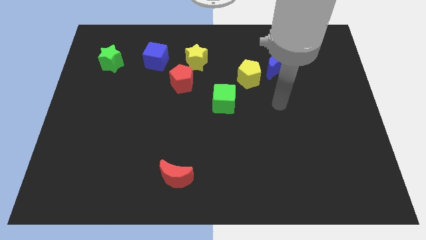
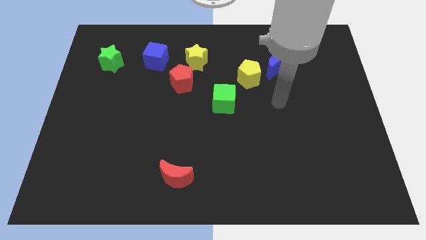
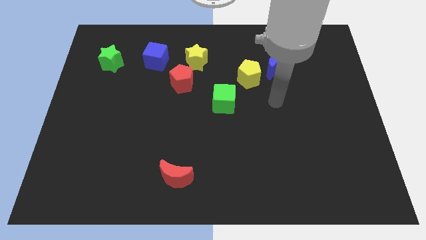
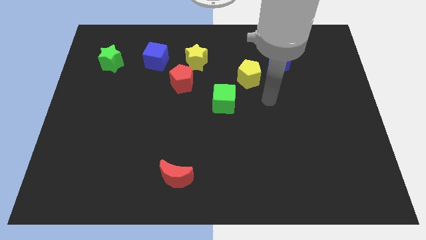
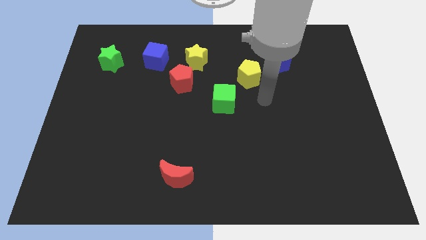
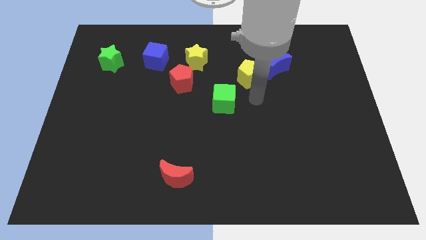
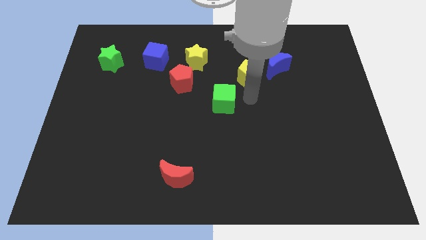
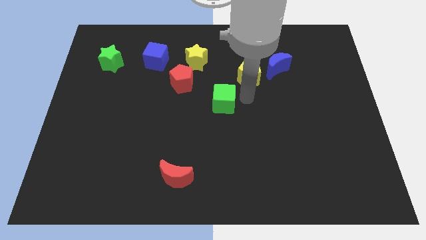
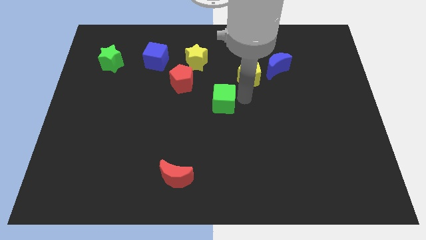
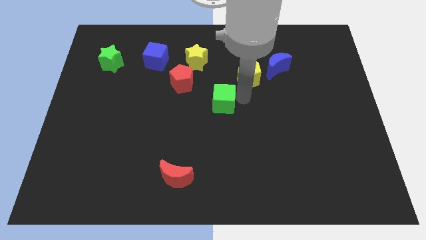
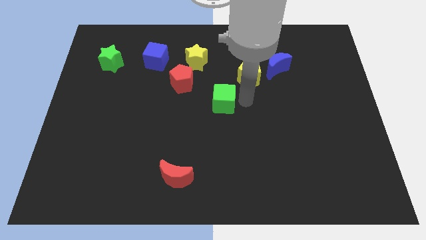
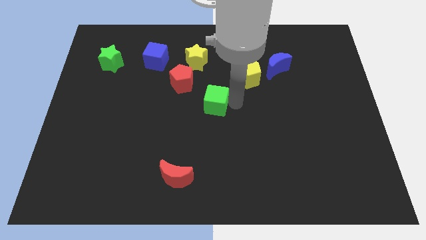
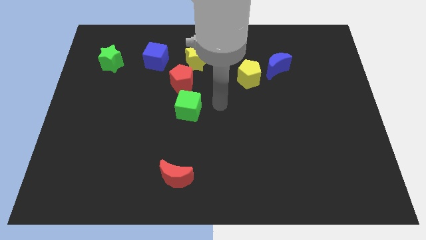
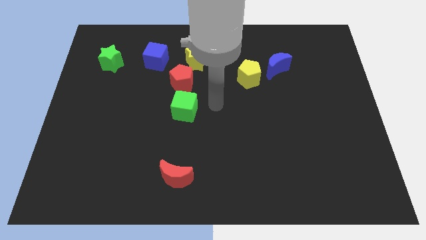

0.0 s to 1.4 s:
put the green cube in between the red pentagon and red crescent

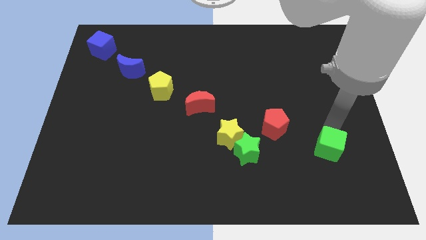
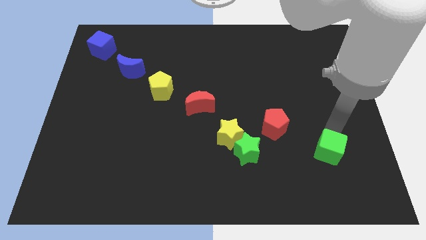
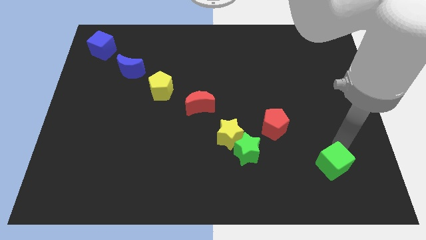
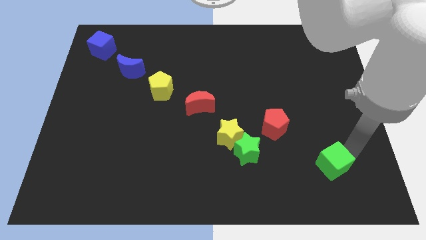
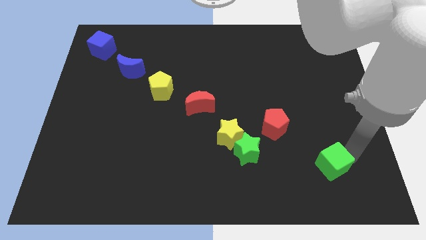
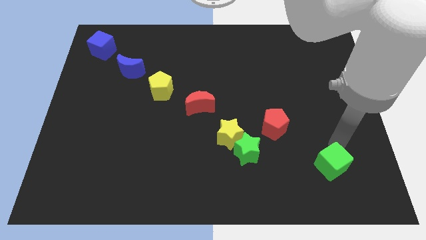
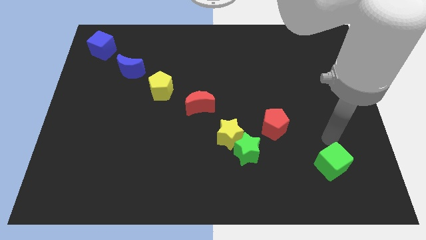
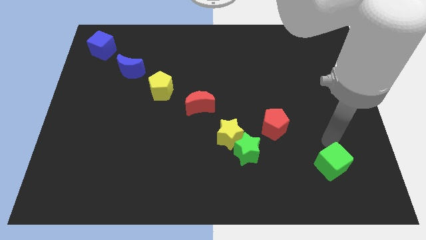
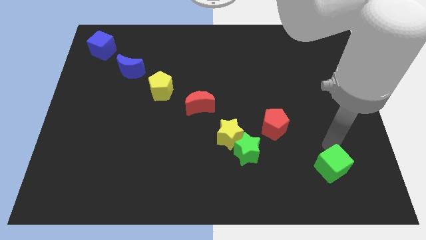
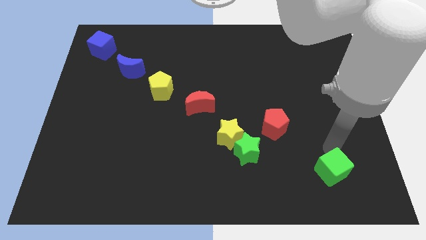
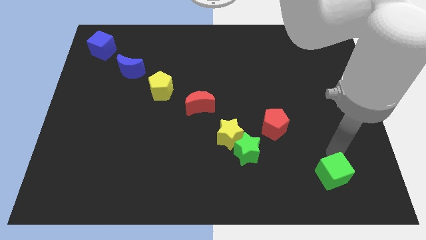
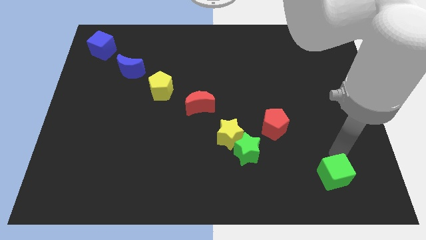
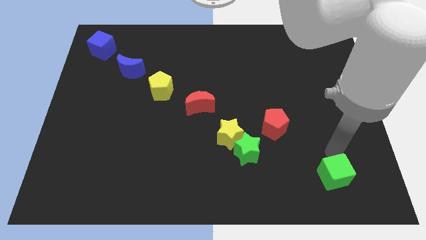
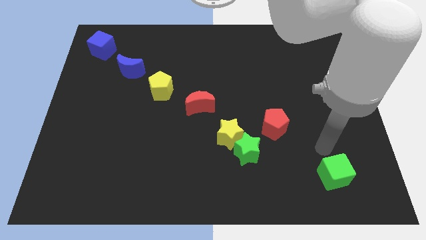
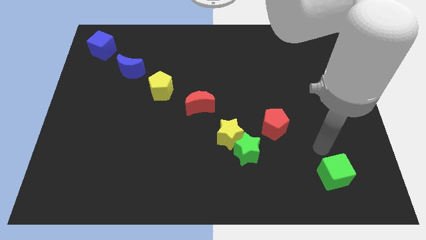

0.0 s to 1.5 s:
move the green cube down slightly

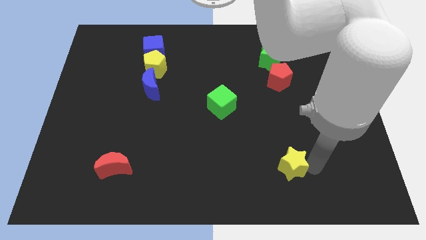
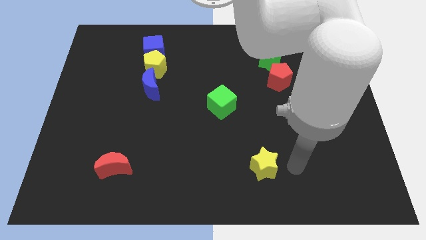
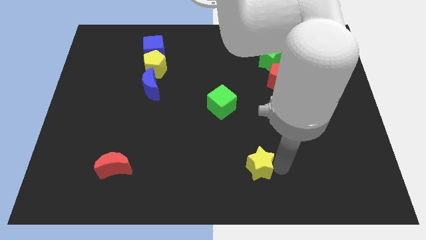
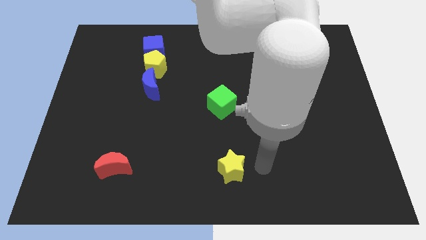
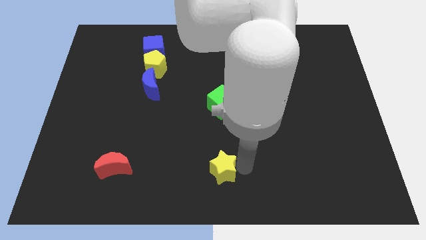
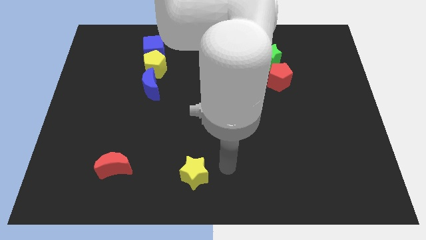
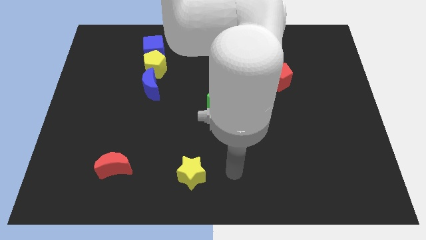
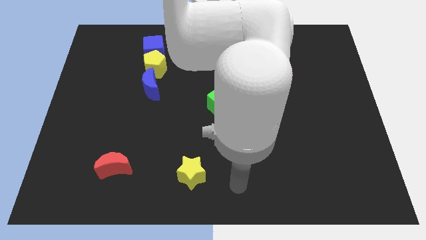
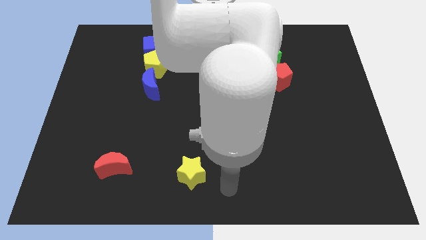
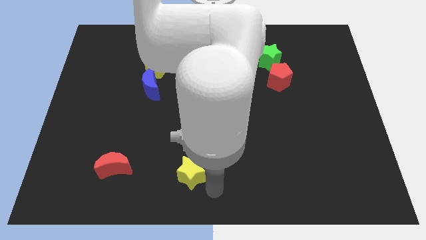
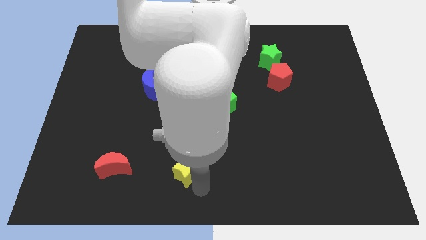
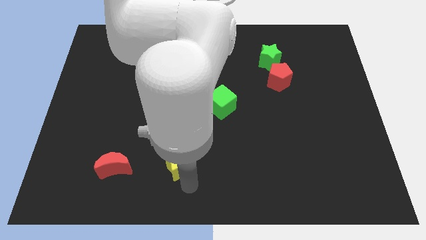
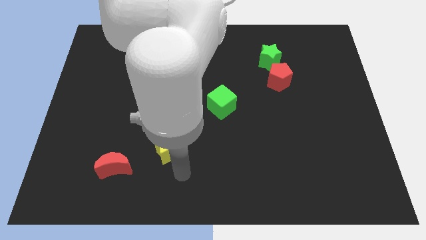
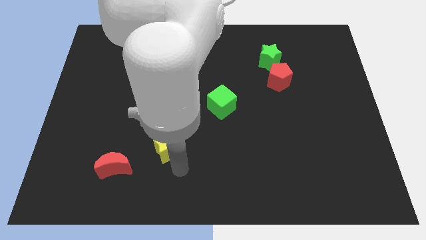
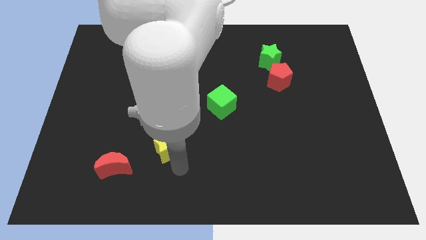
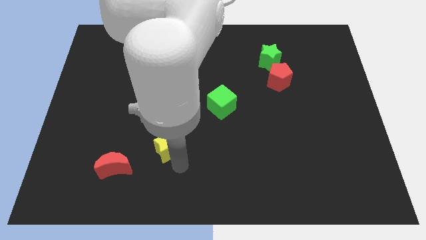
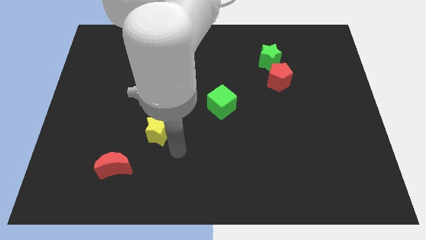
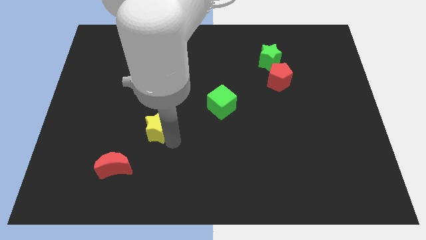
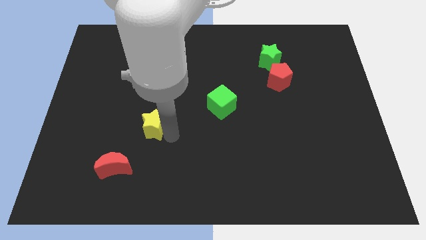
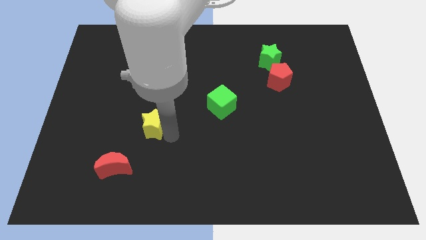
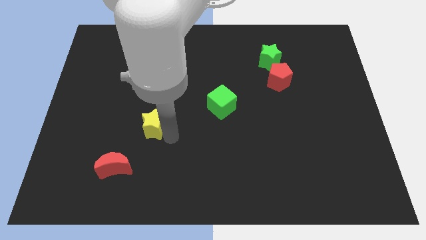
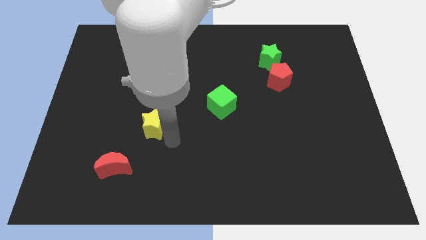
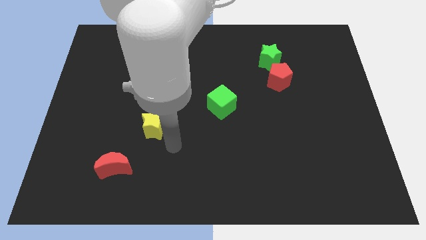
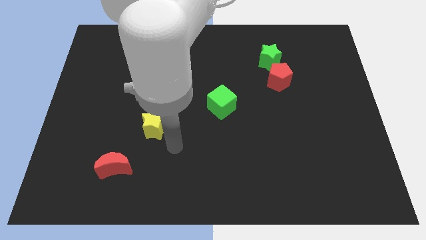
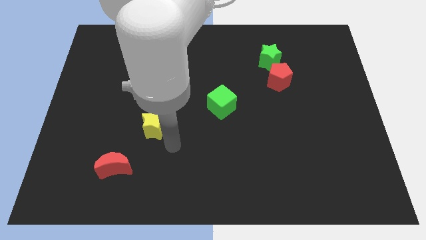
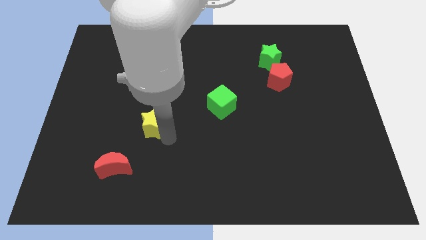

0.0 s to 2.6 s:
push the yellow star towards the yellow pentagon

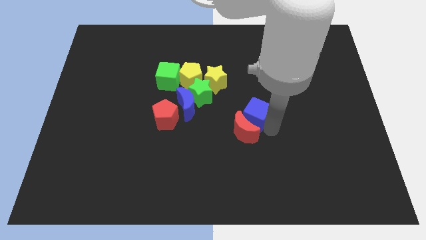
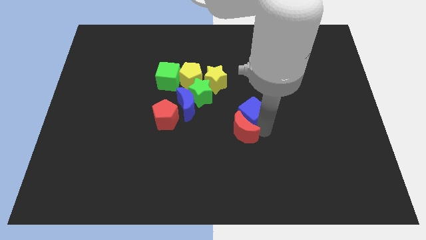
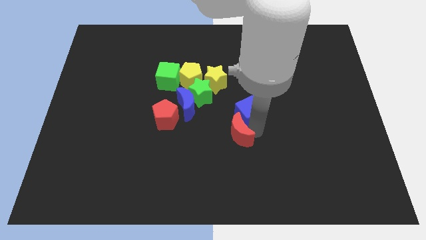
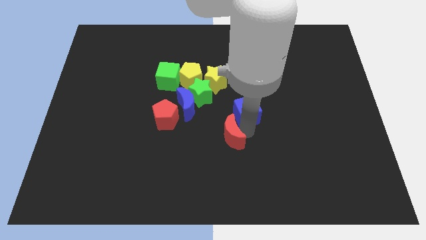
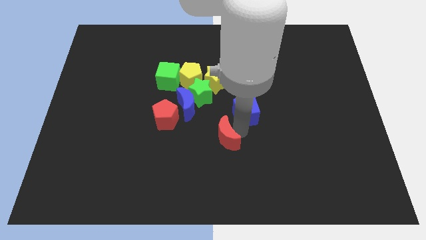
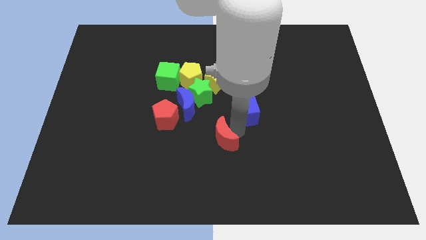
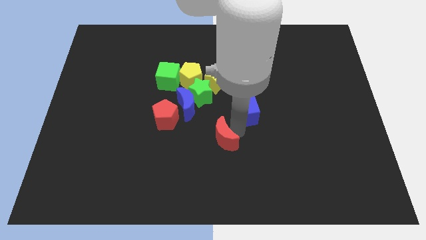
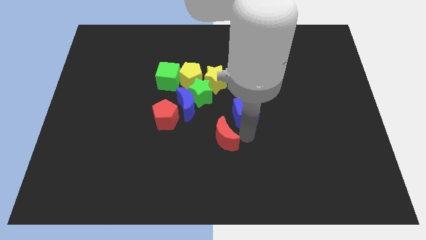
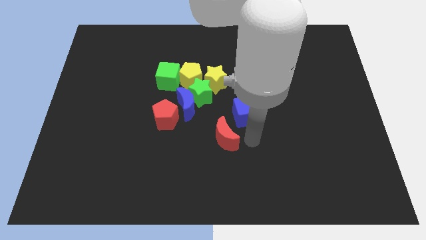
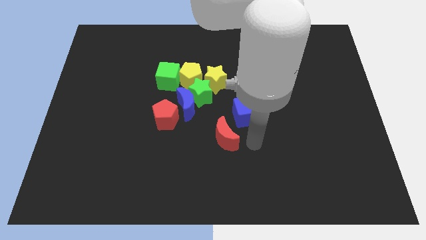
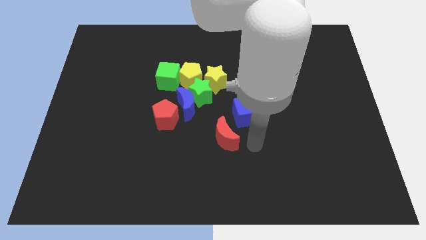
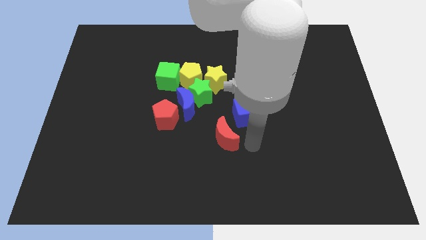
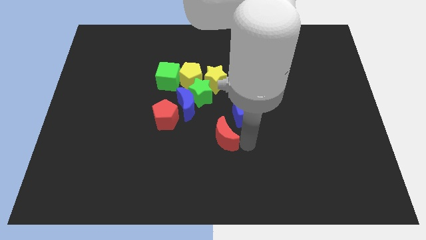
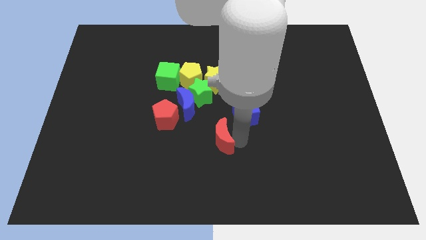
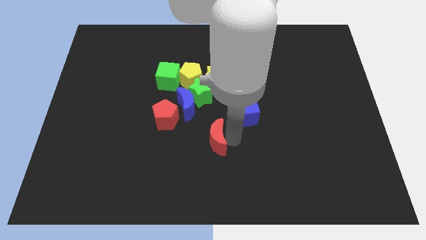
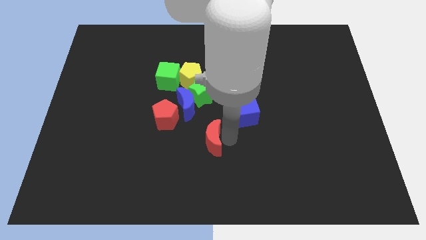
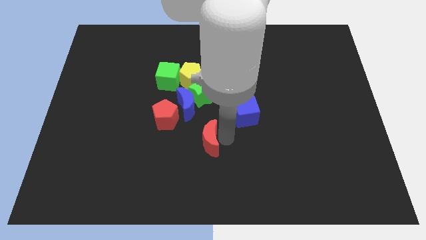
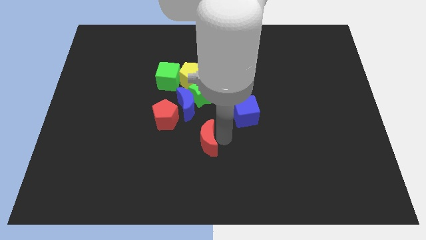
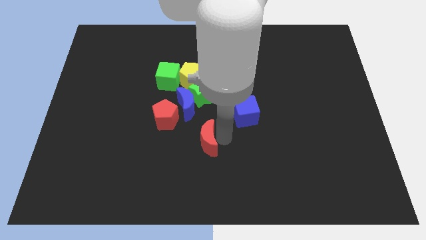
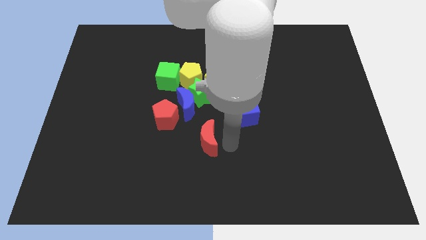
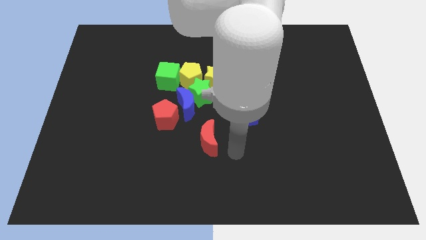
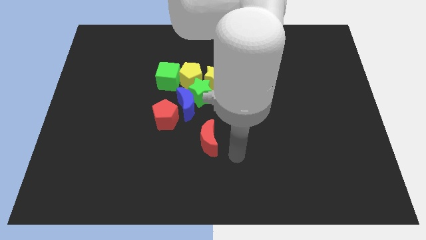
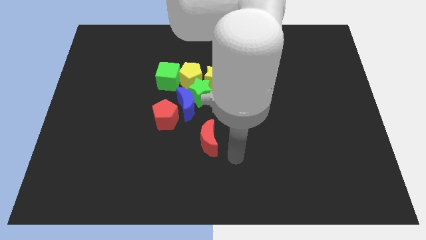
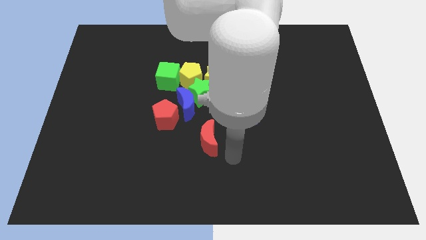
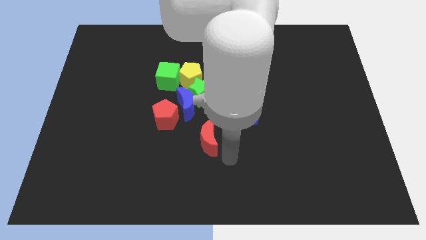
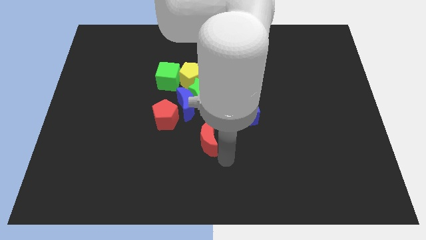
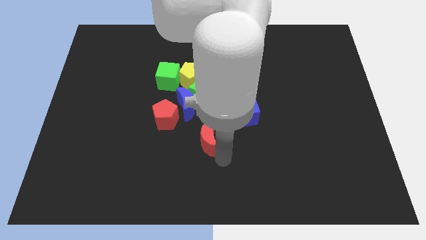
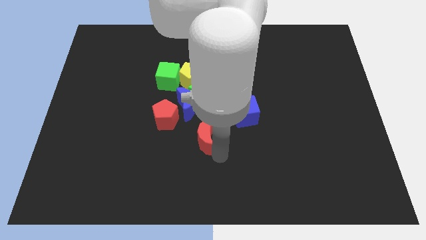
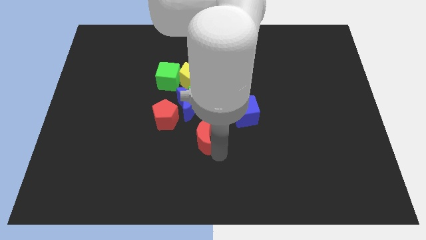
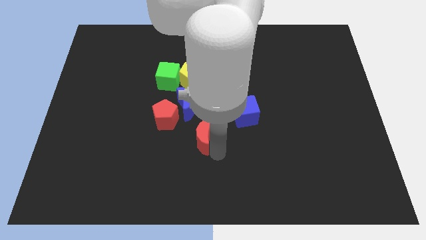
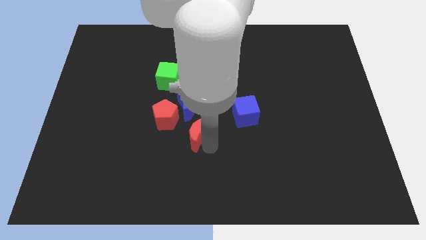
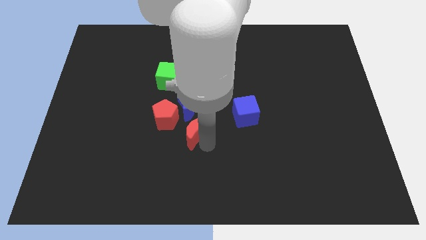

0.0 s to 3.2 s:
separate the red crescent from the blue cube

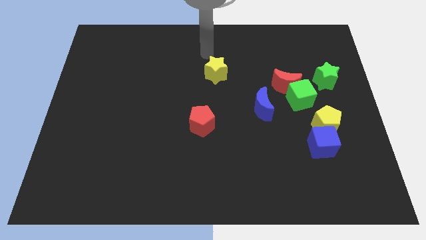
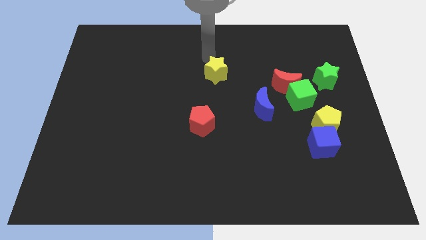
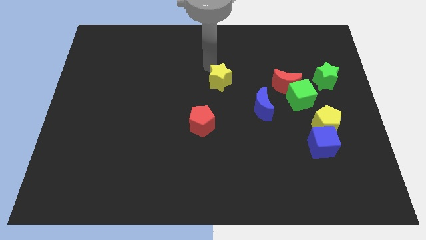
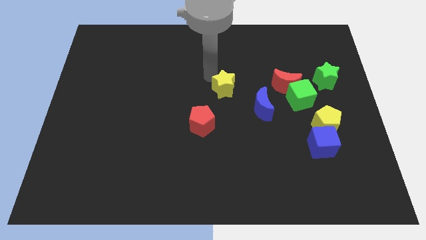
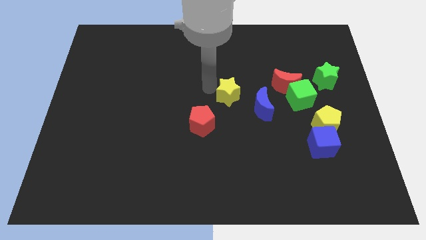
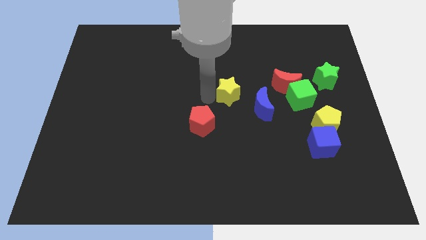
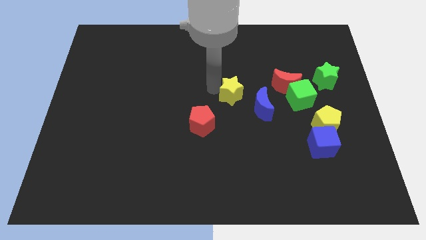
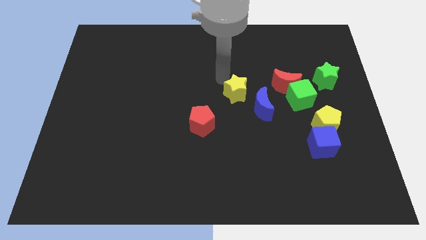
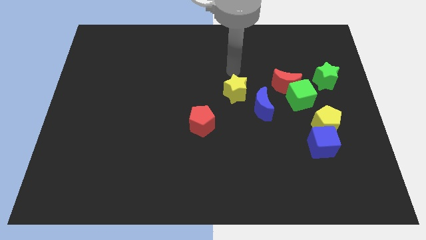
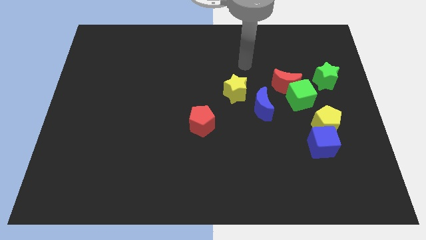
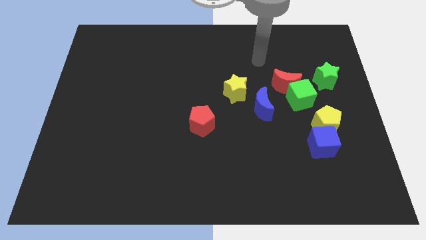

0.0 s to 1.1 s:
push the yellow star down slightly towards the center of board
